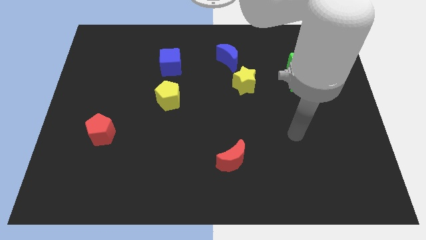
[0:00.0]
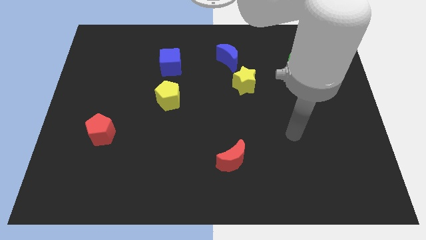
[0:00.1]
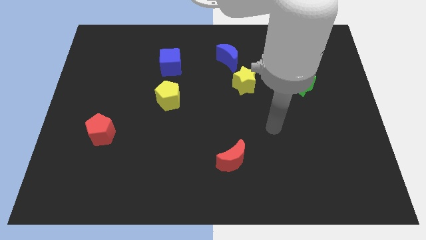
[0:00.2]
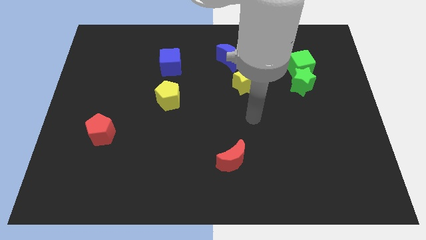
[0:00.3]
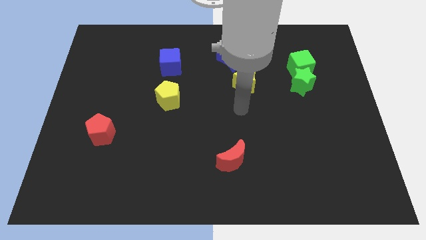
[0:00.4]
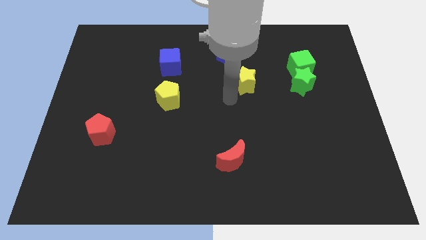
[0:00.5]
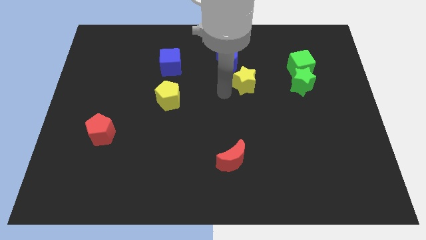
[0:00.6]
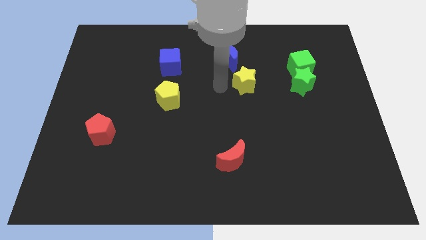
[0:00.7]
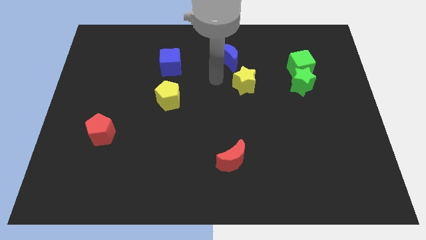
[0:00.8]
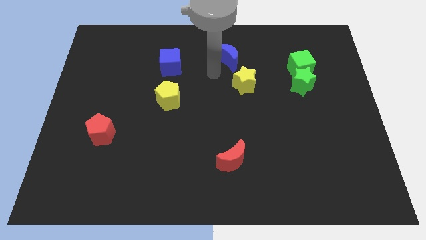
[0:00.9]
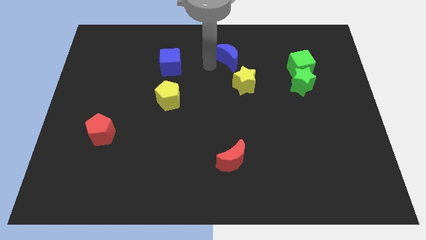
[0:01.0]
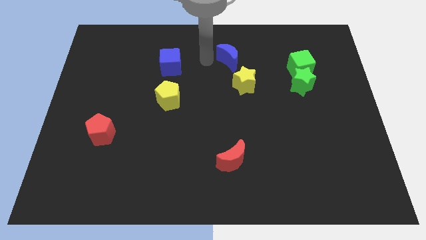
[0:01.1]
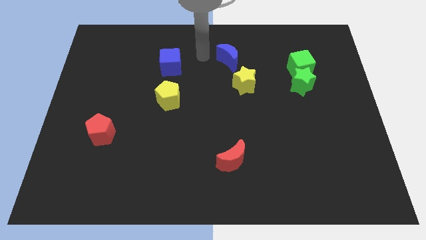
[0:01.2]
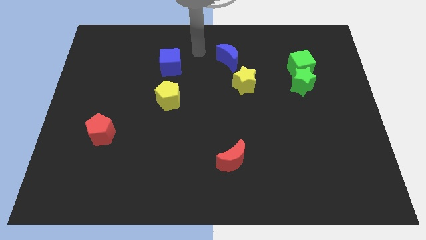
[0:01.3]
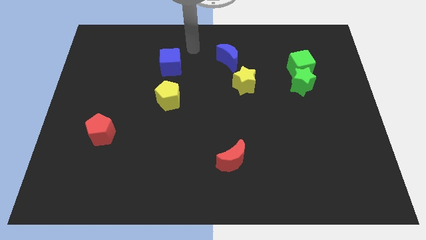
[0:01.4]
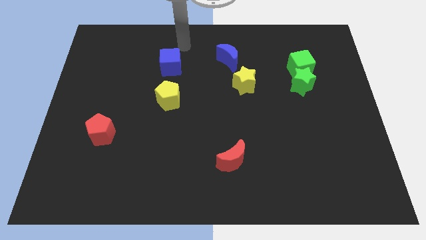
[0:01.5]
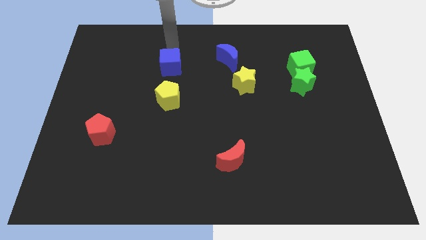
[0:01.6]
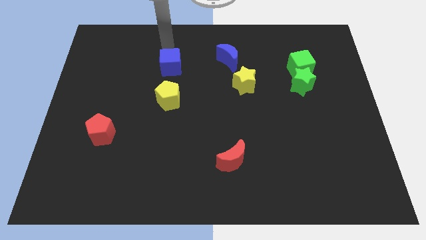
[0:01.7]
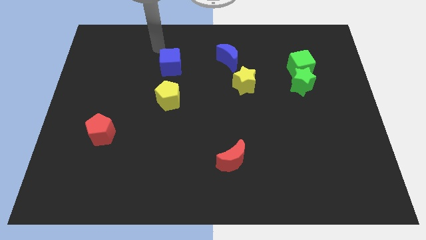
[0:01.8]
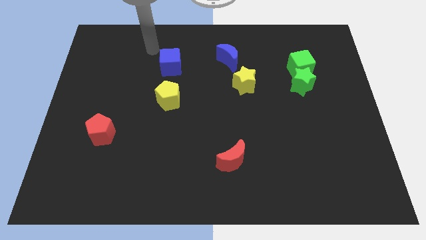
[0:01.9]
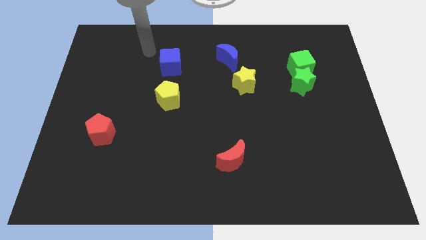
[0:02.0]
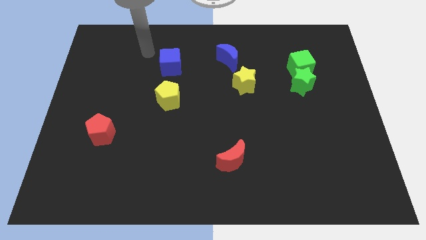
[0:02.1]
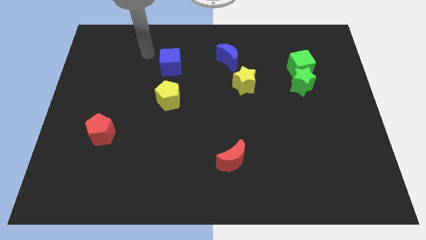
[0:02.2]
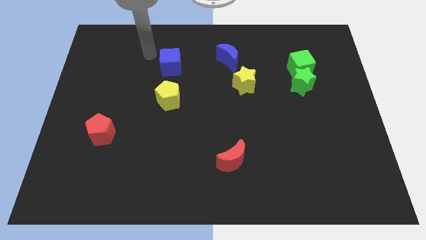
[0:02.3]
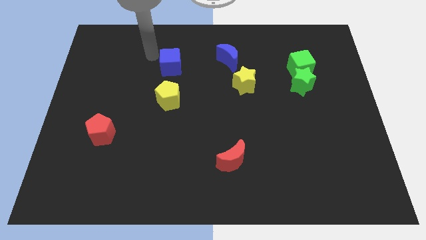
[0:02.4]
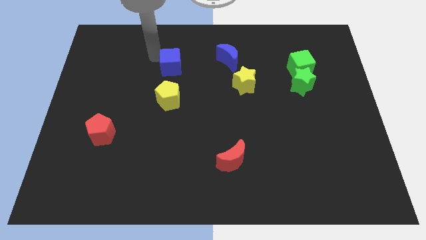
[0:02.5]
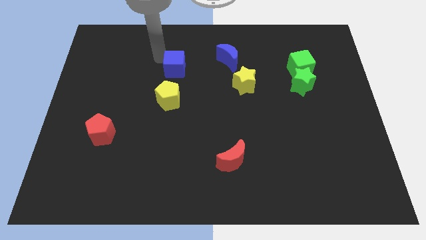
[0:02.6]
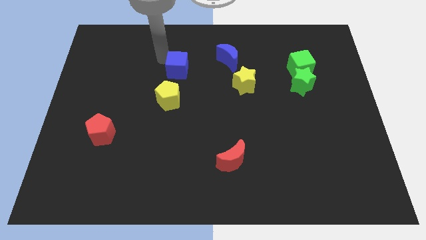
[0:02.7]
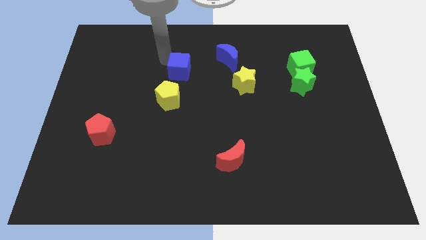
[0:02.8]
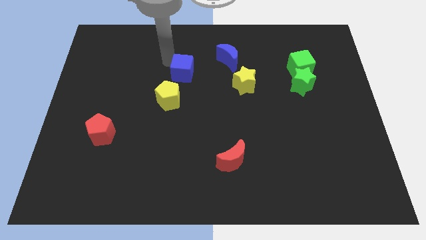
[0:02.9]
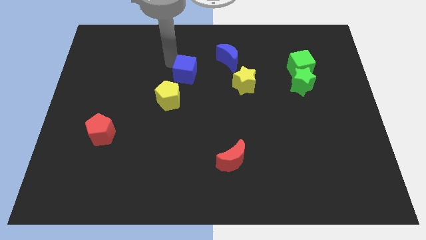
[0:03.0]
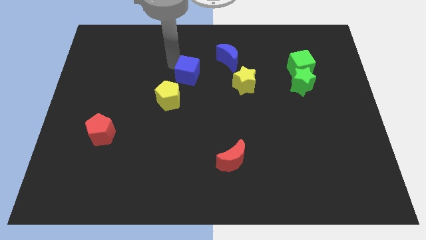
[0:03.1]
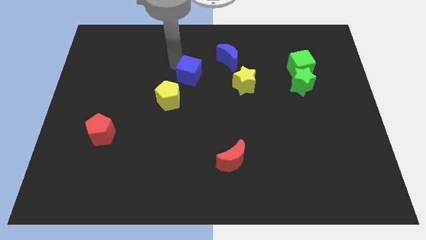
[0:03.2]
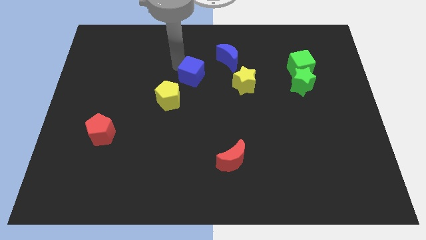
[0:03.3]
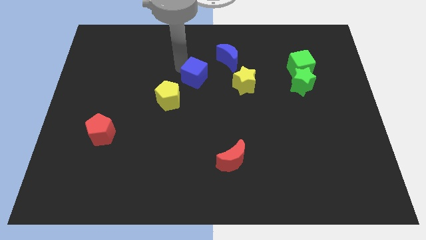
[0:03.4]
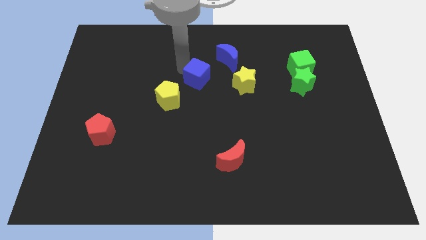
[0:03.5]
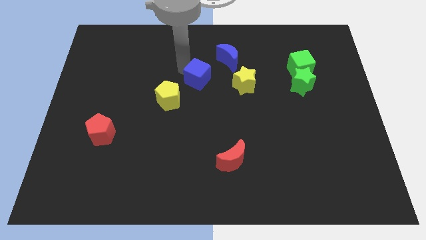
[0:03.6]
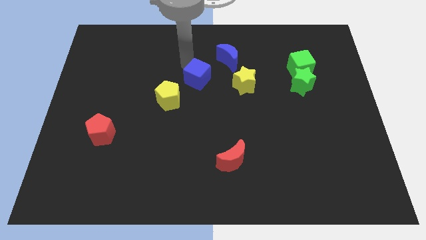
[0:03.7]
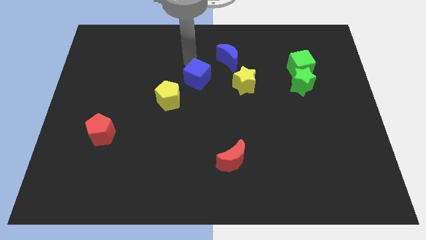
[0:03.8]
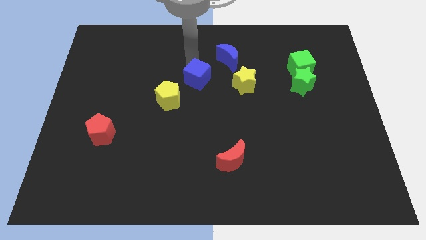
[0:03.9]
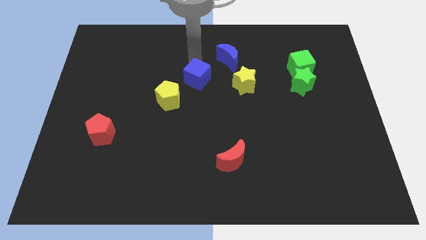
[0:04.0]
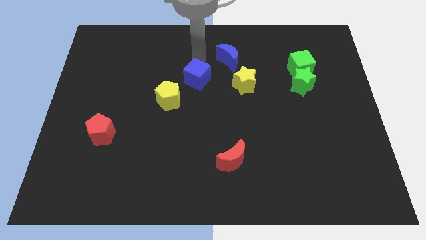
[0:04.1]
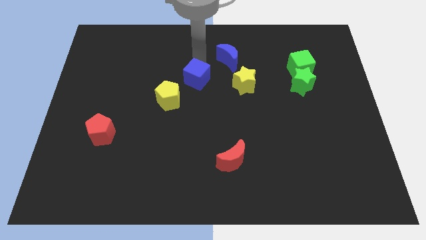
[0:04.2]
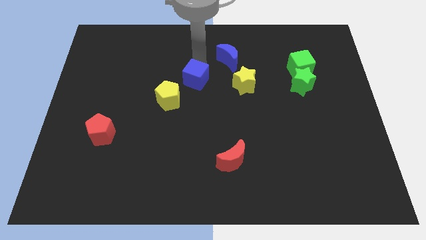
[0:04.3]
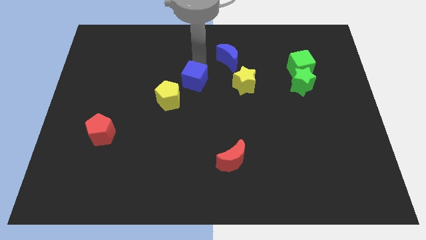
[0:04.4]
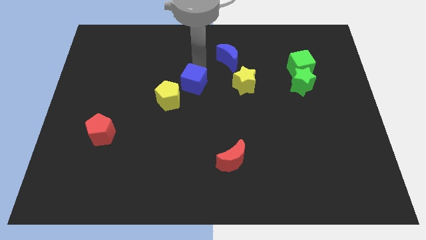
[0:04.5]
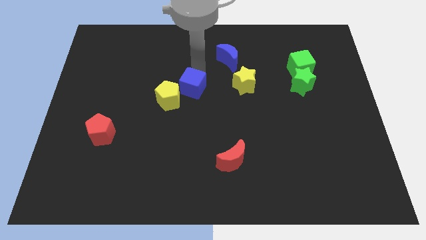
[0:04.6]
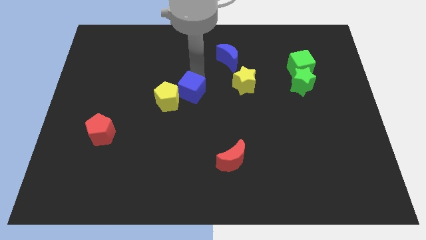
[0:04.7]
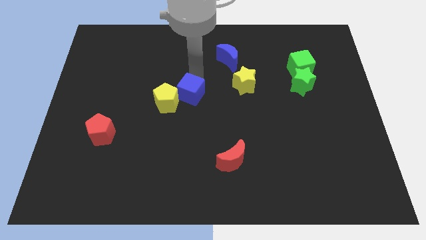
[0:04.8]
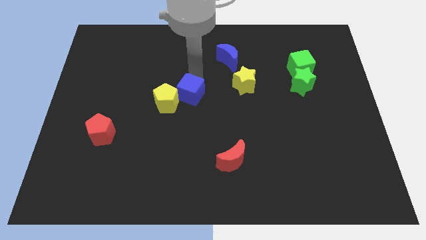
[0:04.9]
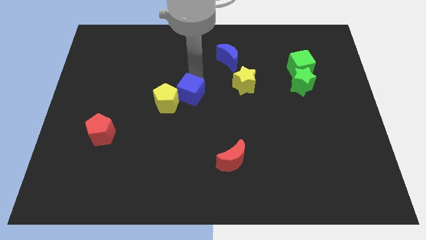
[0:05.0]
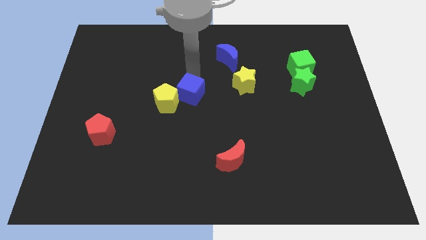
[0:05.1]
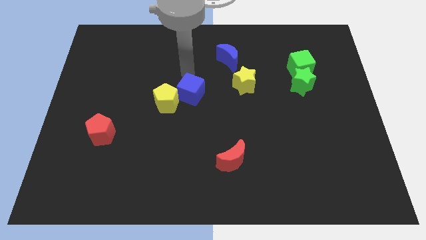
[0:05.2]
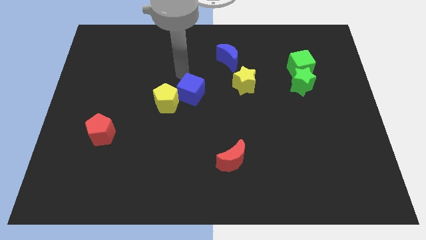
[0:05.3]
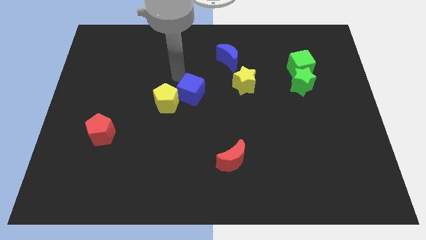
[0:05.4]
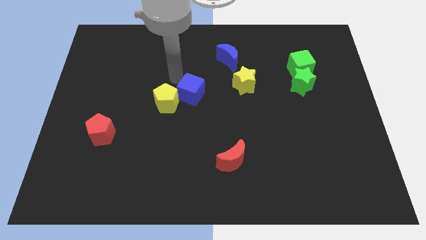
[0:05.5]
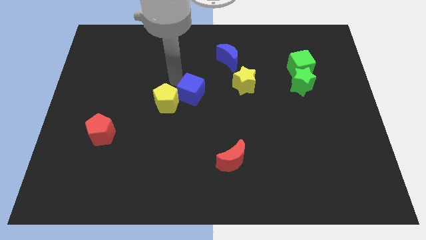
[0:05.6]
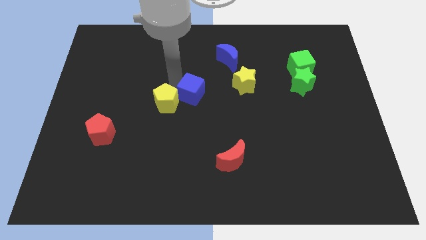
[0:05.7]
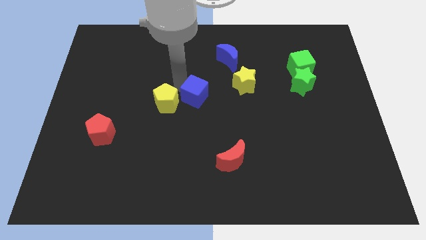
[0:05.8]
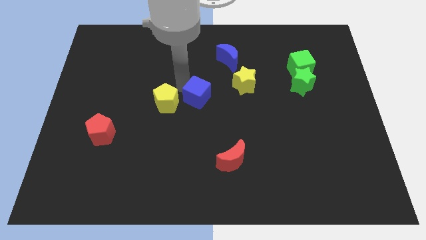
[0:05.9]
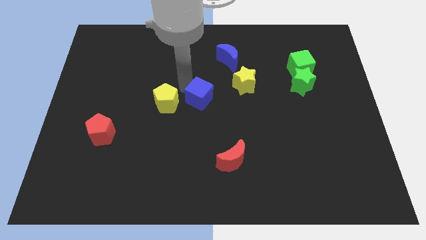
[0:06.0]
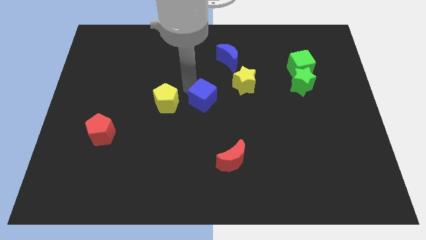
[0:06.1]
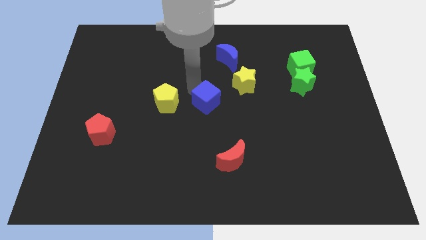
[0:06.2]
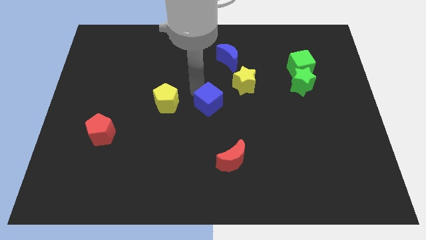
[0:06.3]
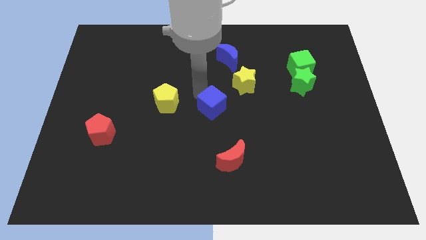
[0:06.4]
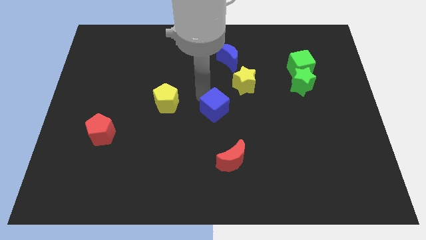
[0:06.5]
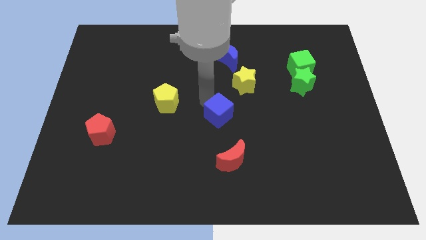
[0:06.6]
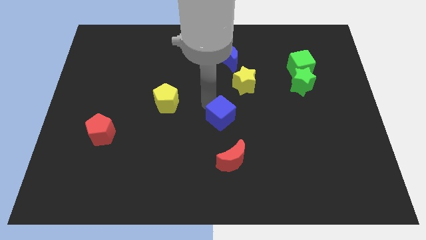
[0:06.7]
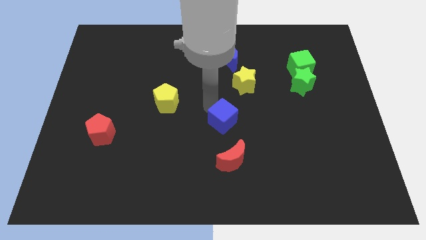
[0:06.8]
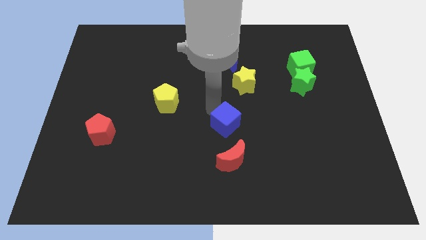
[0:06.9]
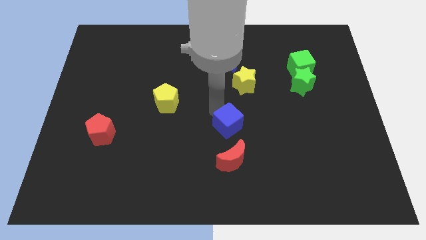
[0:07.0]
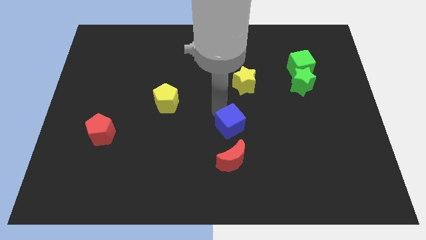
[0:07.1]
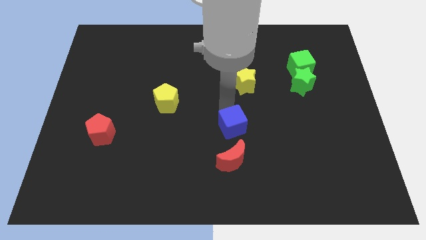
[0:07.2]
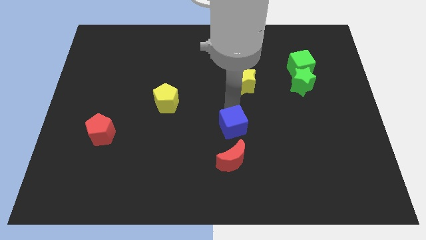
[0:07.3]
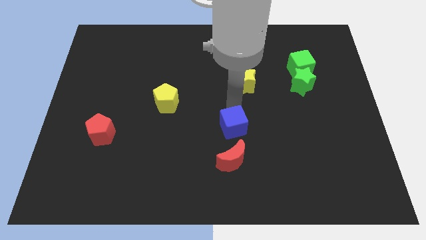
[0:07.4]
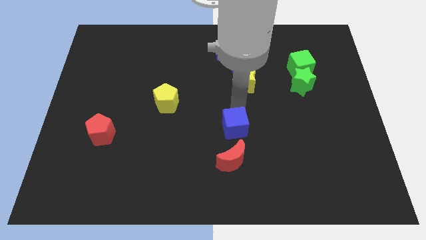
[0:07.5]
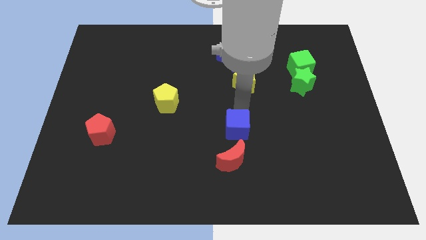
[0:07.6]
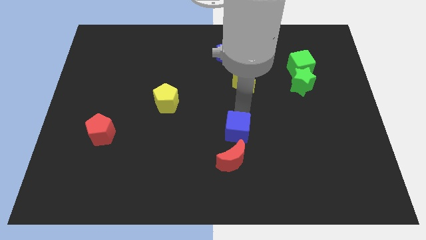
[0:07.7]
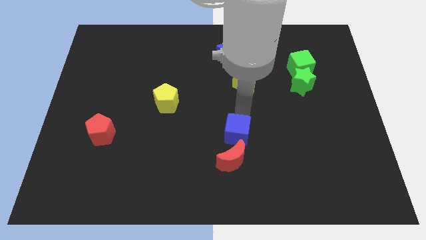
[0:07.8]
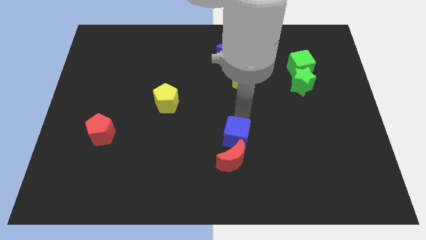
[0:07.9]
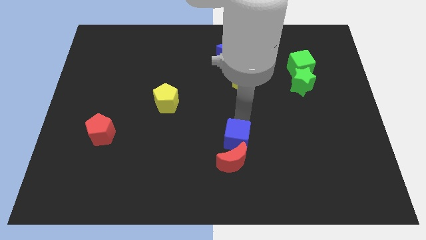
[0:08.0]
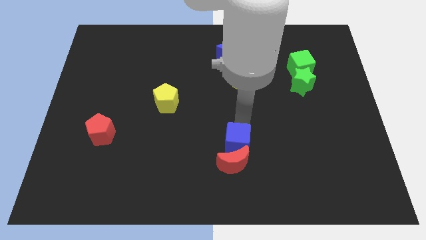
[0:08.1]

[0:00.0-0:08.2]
slide the blue cube to the red moon

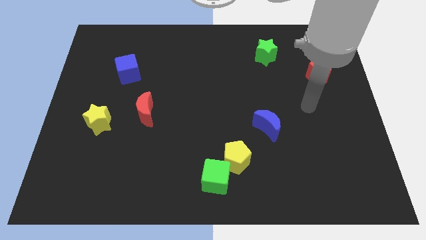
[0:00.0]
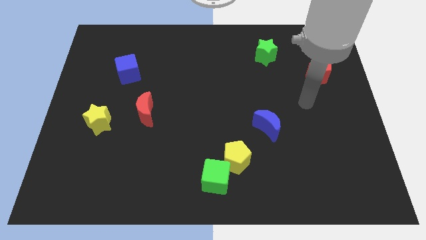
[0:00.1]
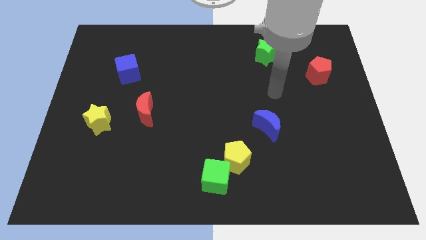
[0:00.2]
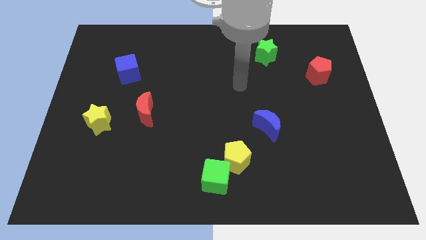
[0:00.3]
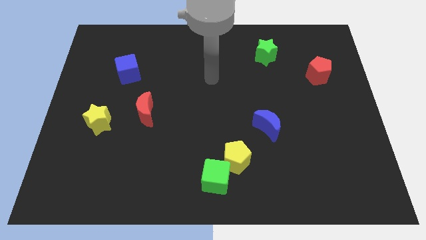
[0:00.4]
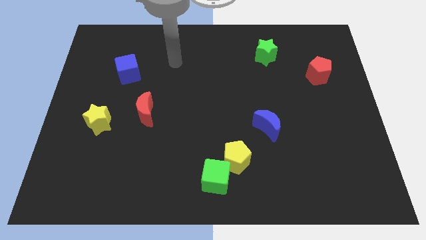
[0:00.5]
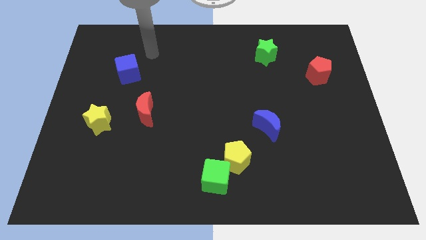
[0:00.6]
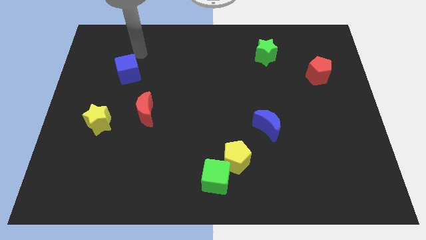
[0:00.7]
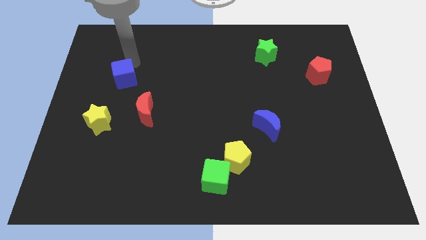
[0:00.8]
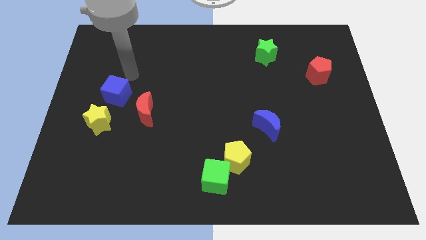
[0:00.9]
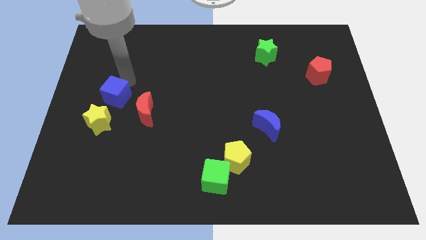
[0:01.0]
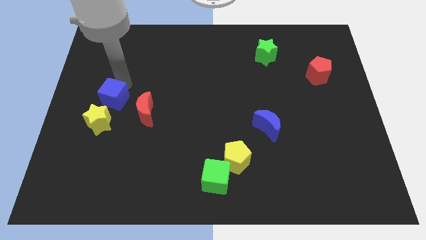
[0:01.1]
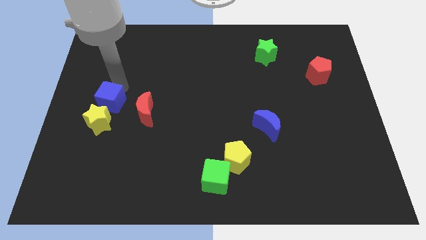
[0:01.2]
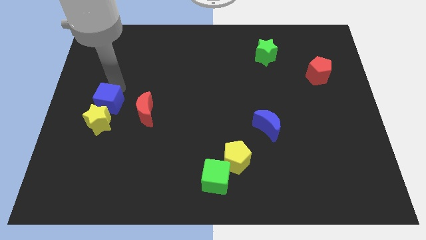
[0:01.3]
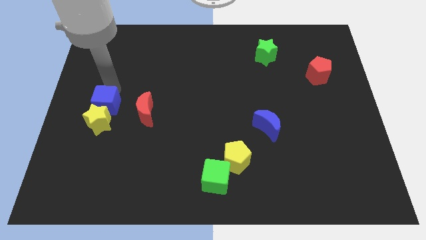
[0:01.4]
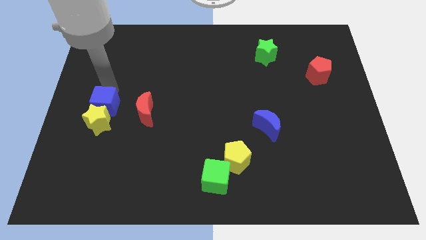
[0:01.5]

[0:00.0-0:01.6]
put the blue cube to the yellow star
